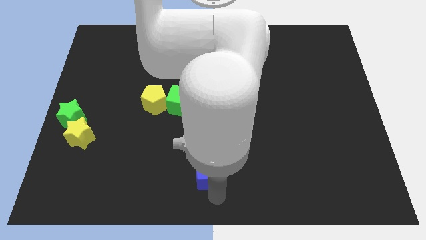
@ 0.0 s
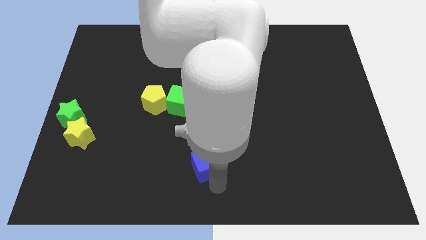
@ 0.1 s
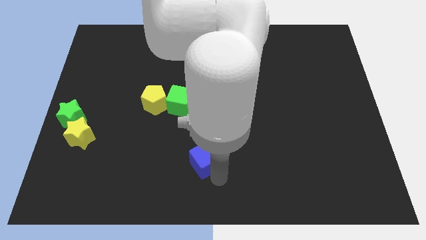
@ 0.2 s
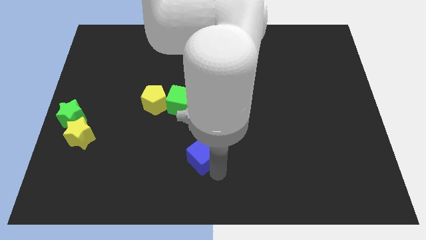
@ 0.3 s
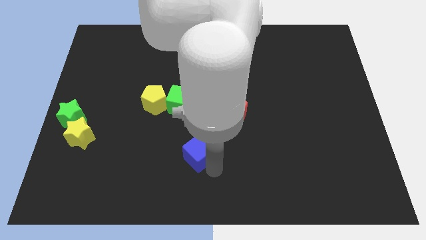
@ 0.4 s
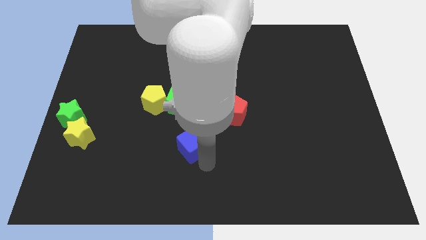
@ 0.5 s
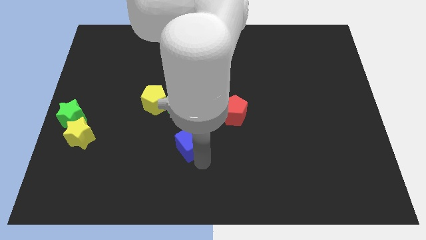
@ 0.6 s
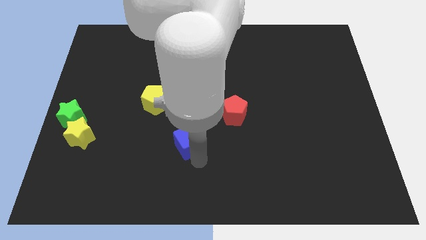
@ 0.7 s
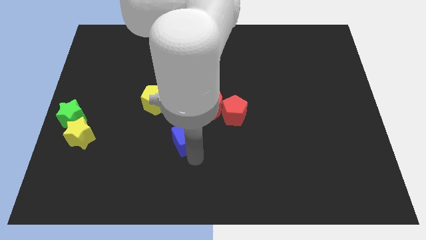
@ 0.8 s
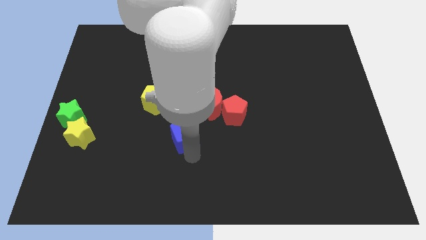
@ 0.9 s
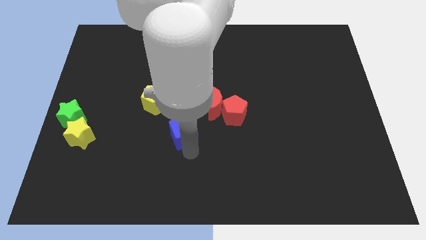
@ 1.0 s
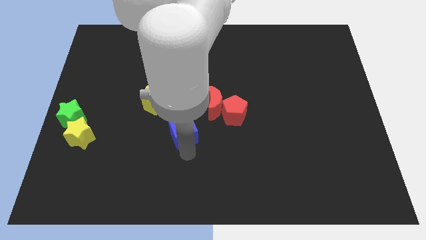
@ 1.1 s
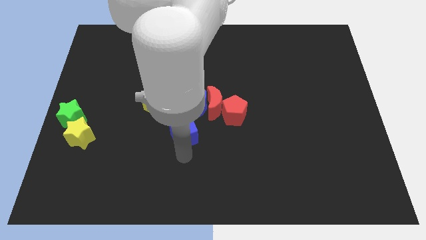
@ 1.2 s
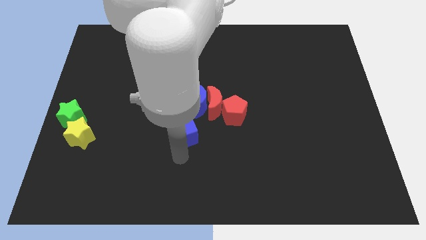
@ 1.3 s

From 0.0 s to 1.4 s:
place the blue cube below the blue moon

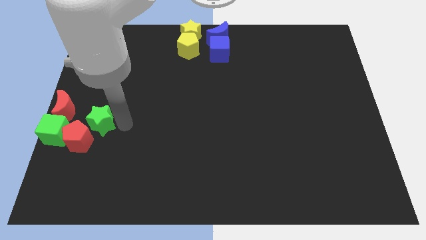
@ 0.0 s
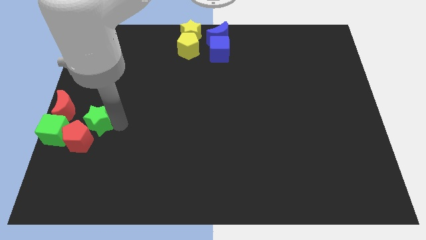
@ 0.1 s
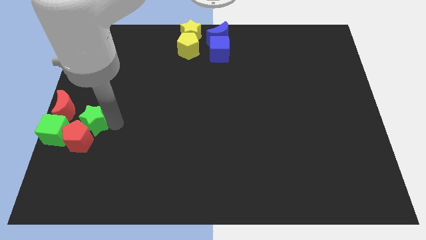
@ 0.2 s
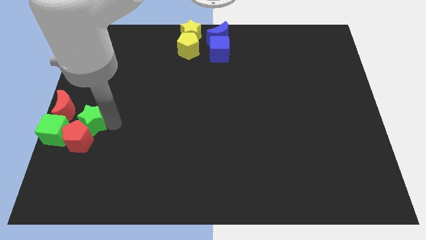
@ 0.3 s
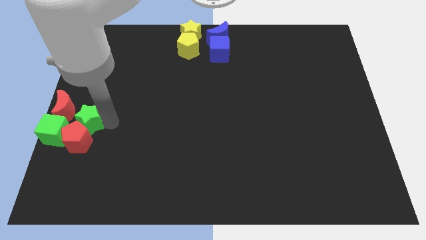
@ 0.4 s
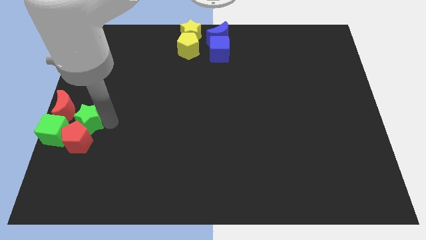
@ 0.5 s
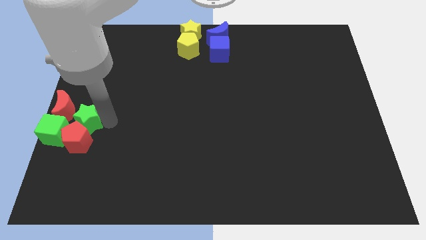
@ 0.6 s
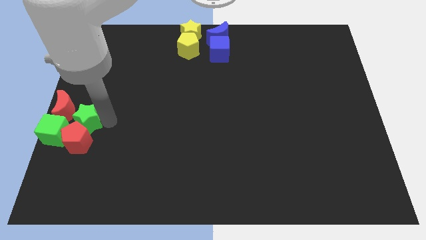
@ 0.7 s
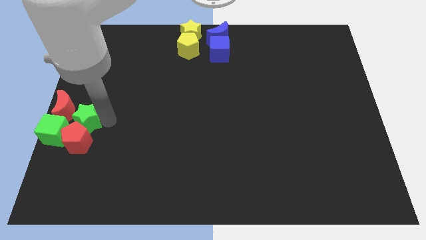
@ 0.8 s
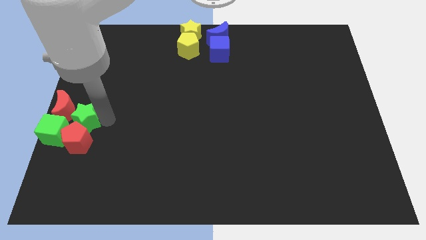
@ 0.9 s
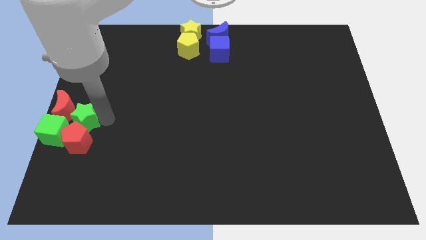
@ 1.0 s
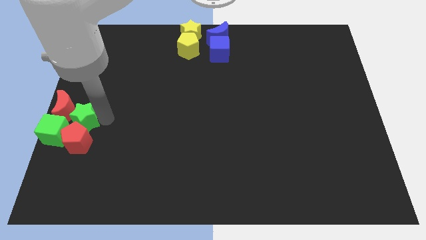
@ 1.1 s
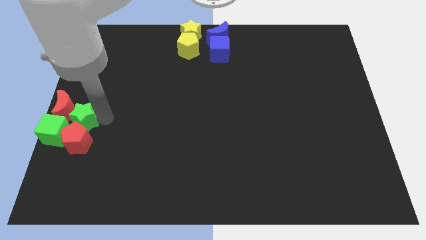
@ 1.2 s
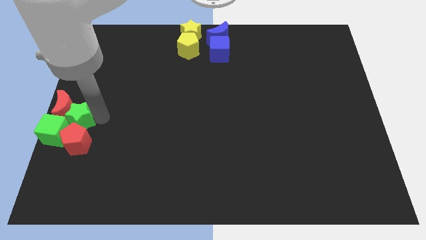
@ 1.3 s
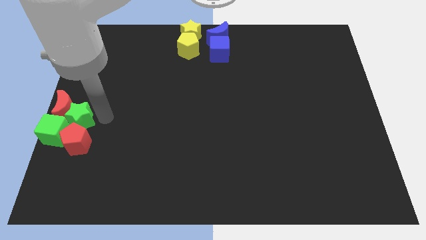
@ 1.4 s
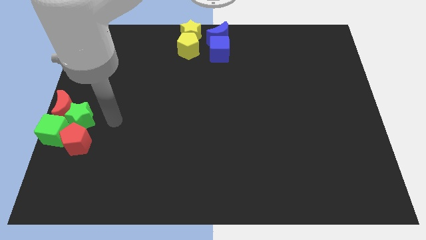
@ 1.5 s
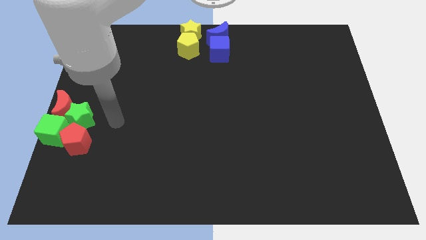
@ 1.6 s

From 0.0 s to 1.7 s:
push the green star into the green cube

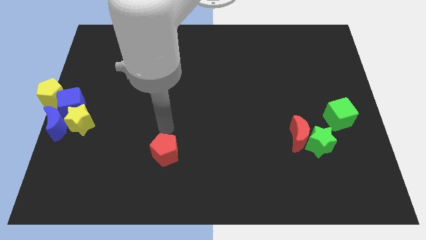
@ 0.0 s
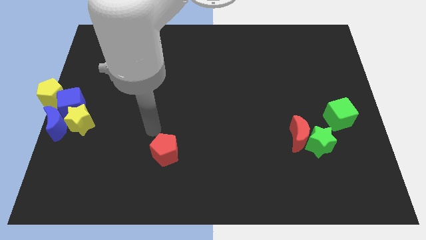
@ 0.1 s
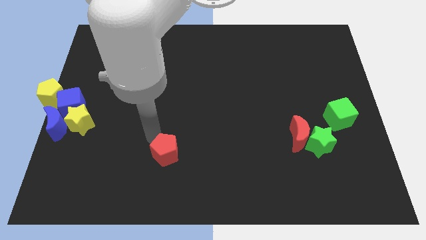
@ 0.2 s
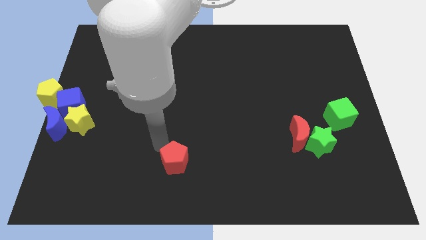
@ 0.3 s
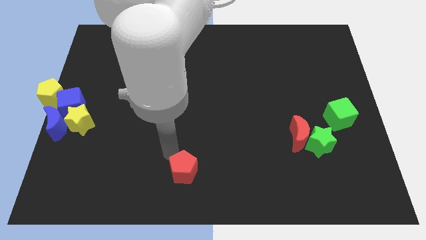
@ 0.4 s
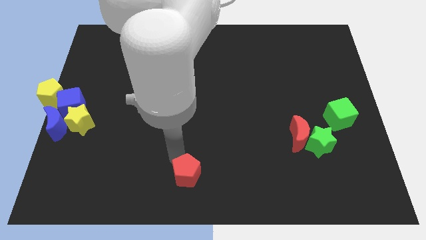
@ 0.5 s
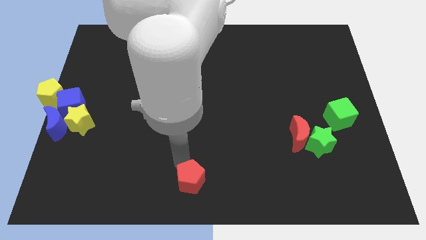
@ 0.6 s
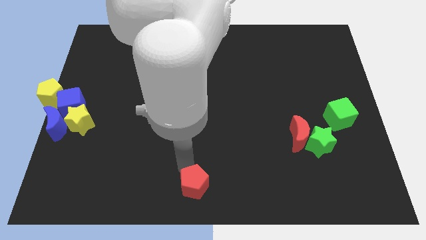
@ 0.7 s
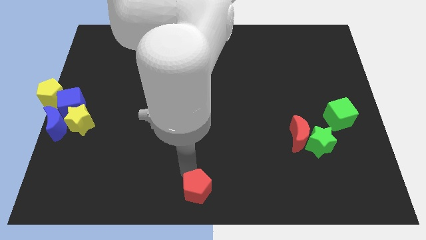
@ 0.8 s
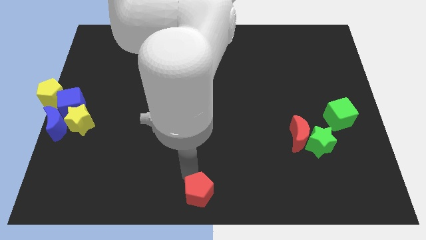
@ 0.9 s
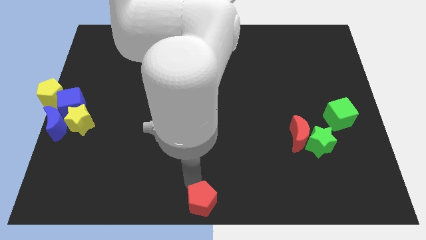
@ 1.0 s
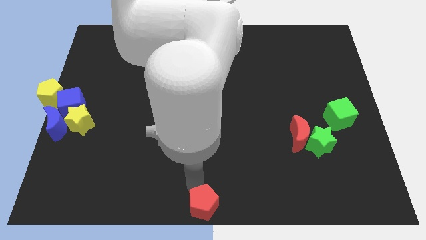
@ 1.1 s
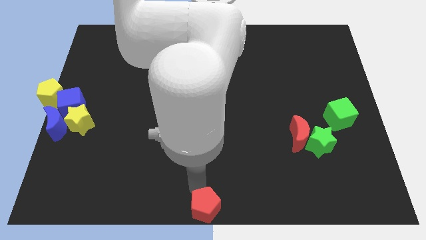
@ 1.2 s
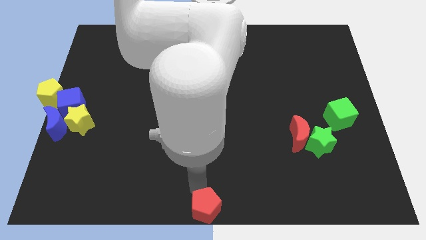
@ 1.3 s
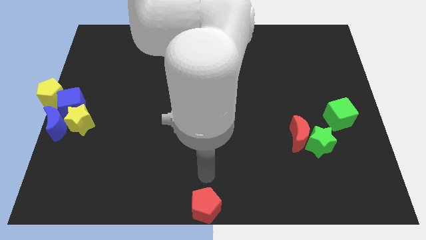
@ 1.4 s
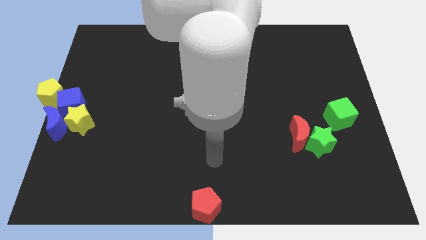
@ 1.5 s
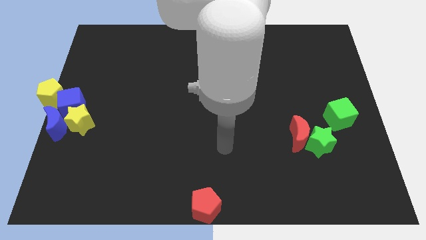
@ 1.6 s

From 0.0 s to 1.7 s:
push the red crescent at bottom center of the board

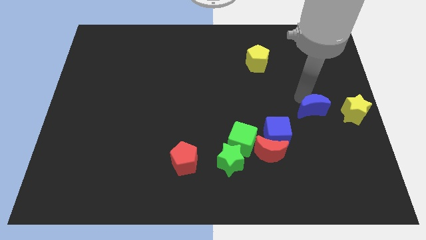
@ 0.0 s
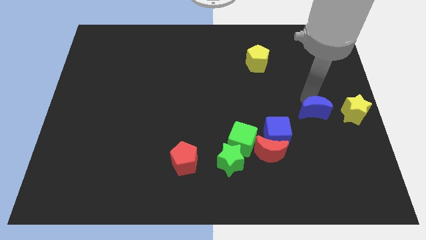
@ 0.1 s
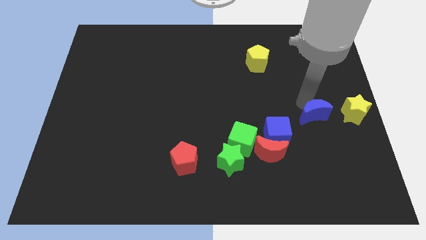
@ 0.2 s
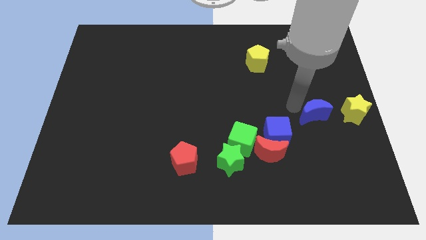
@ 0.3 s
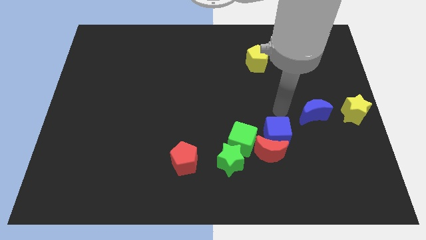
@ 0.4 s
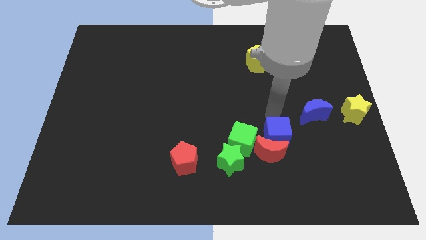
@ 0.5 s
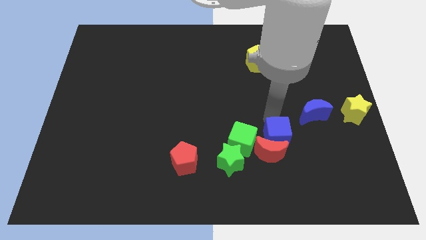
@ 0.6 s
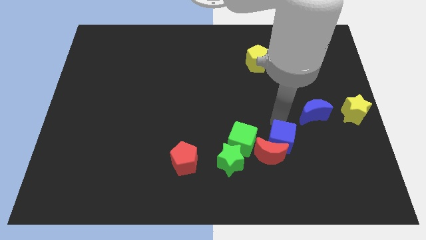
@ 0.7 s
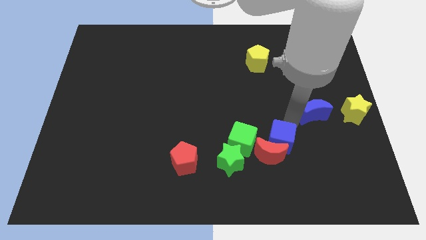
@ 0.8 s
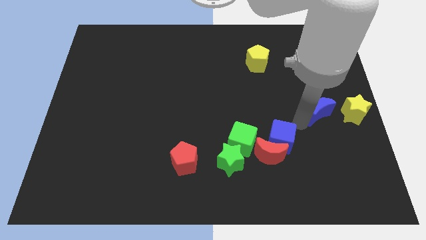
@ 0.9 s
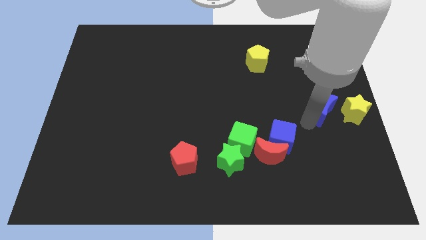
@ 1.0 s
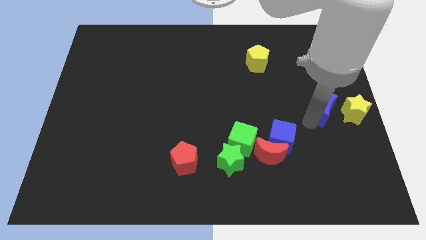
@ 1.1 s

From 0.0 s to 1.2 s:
slightly move down the blue cube

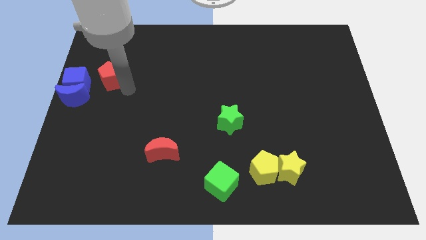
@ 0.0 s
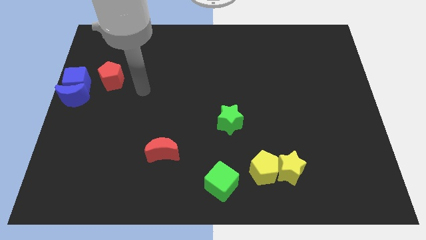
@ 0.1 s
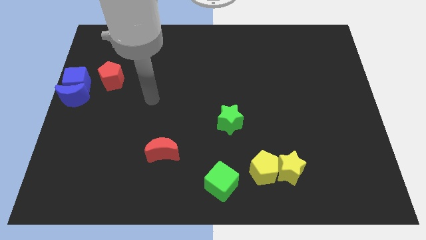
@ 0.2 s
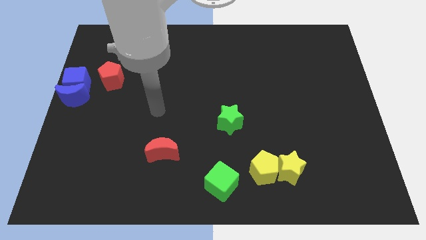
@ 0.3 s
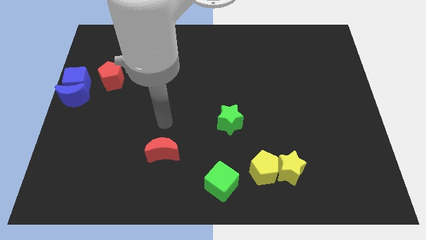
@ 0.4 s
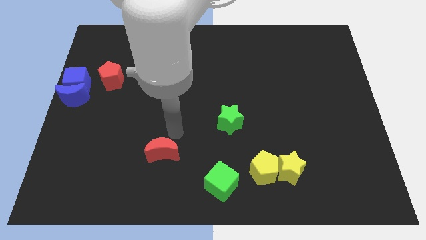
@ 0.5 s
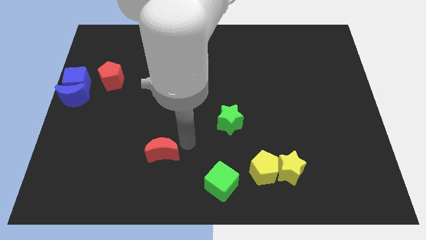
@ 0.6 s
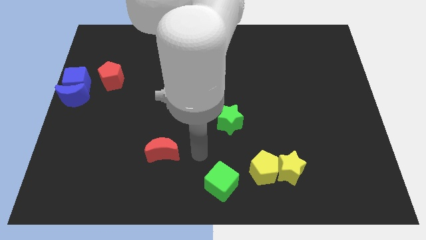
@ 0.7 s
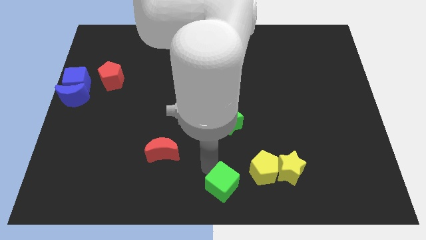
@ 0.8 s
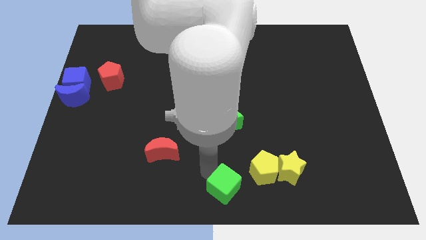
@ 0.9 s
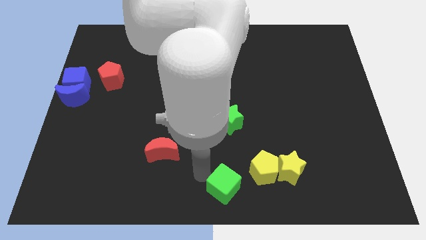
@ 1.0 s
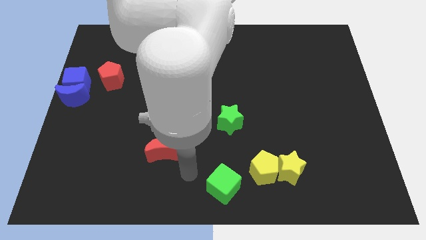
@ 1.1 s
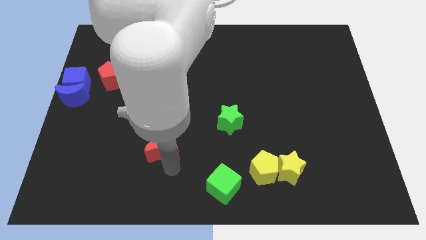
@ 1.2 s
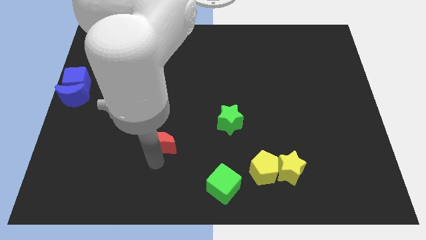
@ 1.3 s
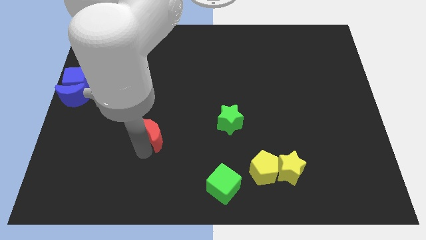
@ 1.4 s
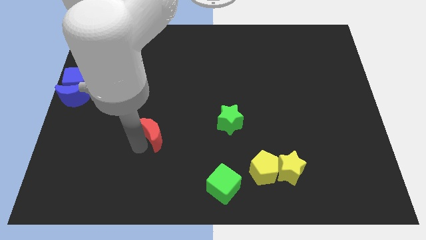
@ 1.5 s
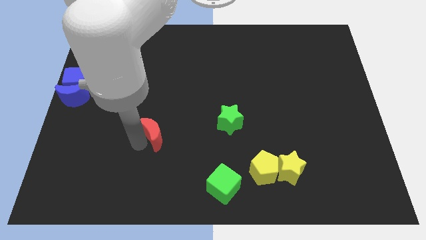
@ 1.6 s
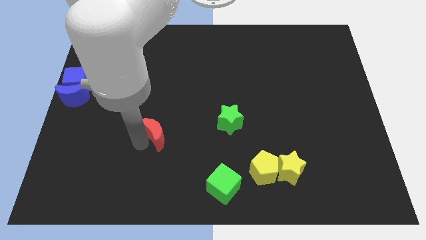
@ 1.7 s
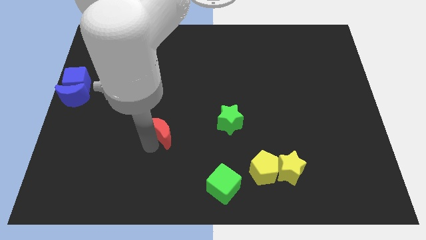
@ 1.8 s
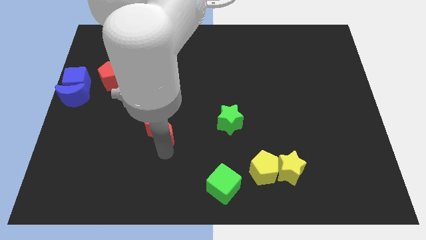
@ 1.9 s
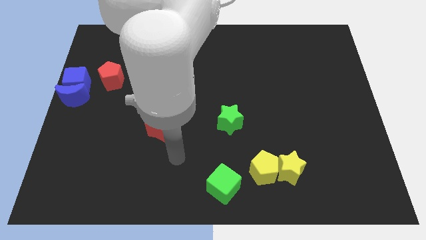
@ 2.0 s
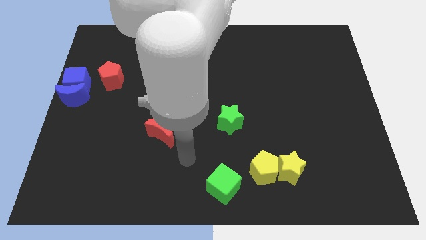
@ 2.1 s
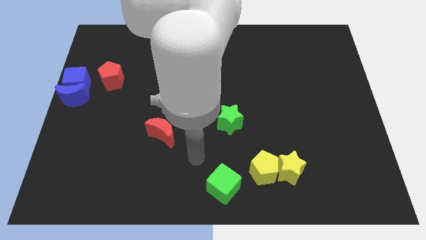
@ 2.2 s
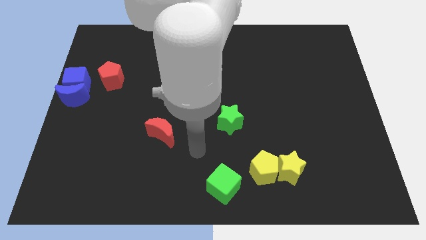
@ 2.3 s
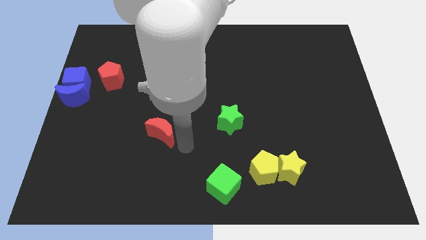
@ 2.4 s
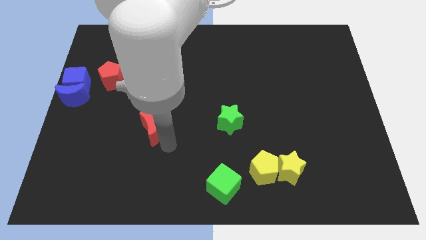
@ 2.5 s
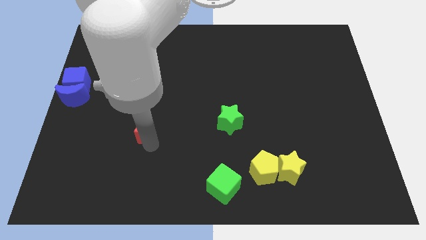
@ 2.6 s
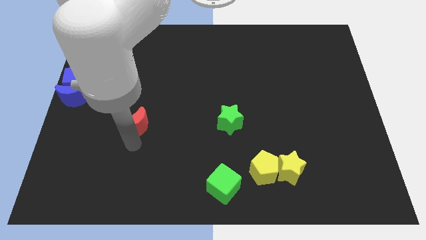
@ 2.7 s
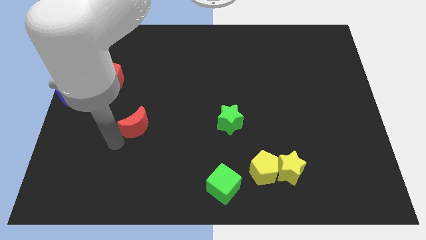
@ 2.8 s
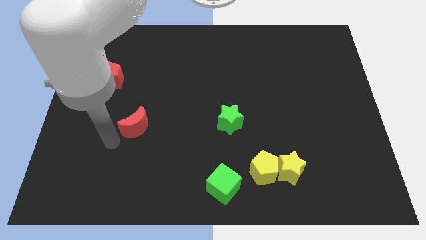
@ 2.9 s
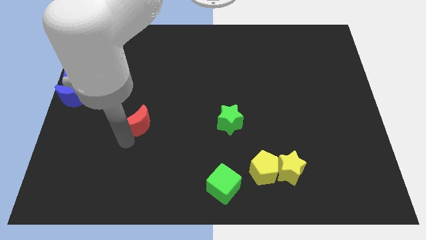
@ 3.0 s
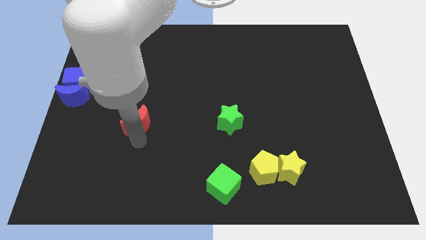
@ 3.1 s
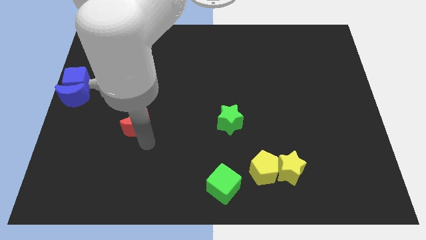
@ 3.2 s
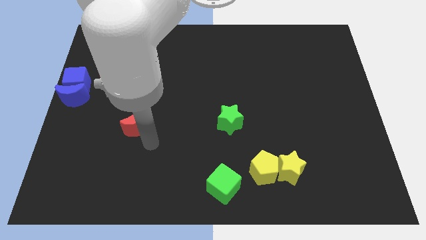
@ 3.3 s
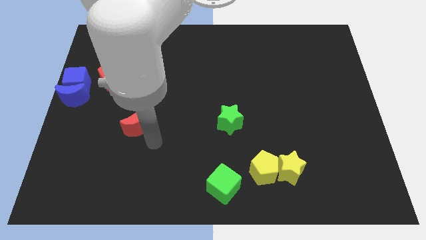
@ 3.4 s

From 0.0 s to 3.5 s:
push the red crescent left to the green star
